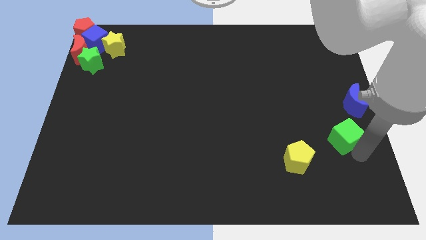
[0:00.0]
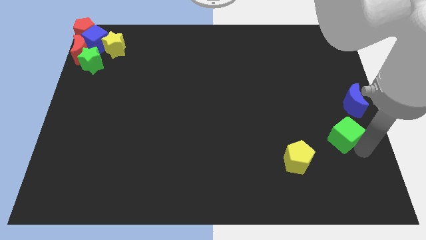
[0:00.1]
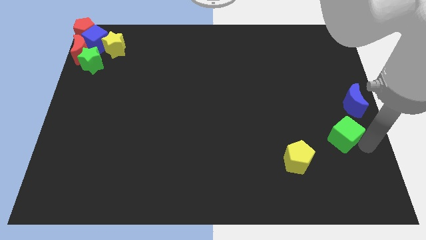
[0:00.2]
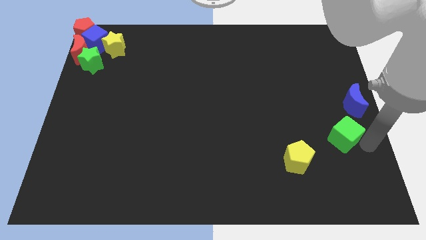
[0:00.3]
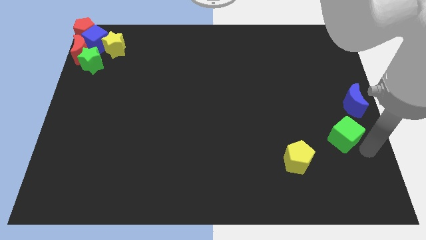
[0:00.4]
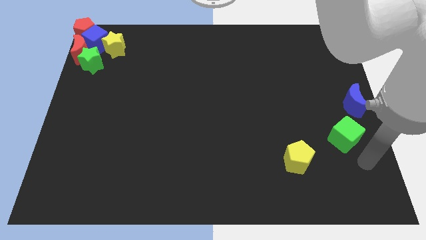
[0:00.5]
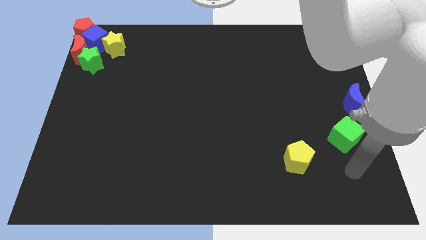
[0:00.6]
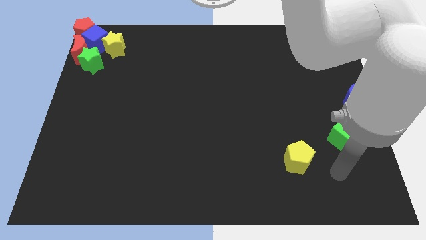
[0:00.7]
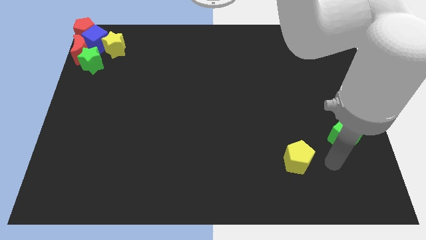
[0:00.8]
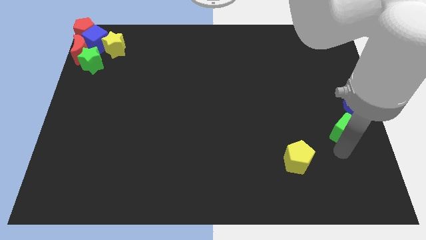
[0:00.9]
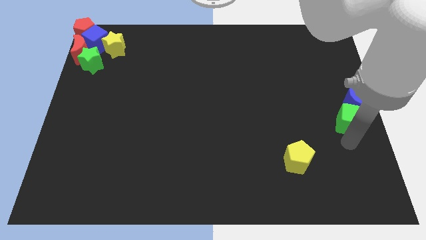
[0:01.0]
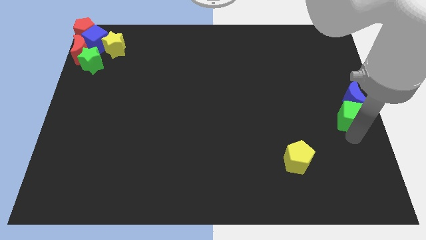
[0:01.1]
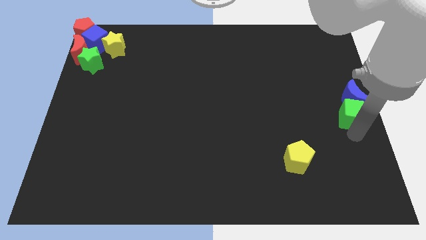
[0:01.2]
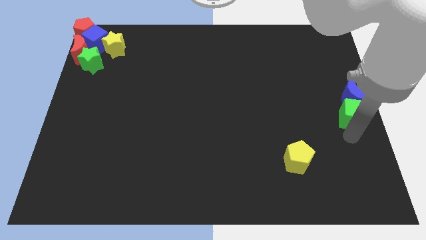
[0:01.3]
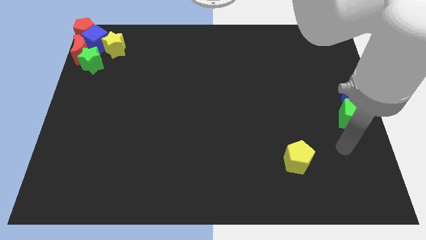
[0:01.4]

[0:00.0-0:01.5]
push the green cube into the blue crescent

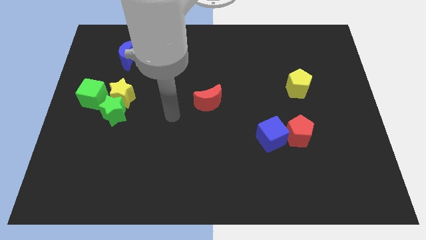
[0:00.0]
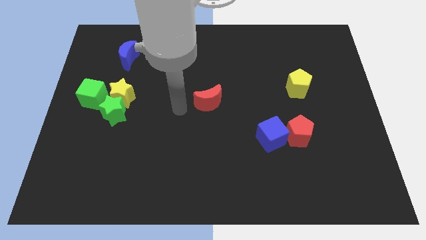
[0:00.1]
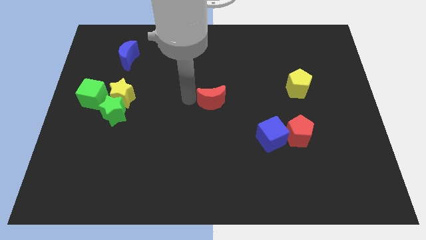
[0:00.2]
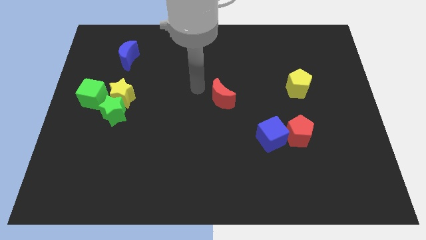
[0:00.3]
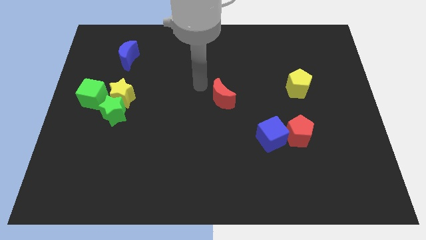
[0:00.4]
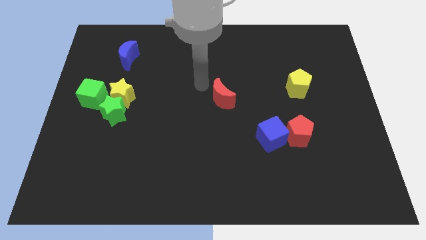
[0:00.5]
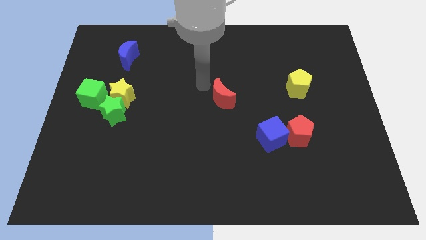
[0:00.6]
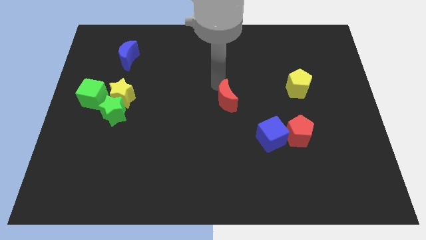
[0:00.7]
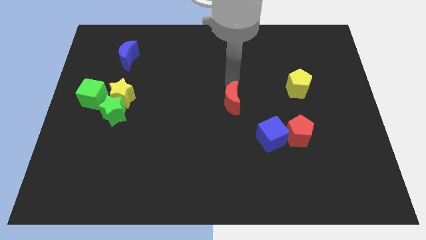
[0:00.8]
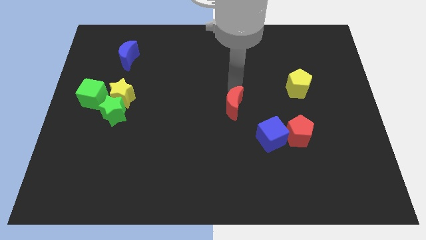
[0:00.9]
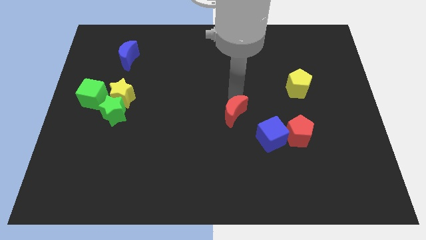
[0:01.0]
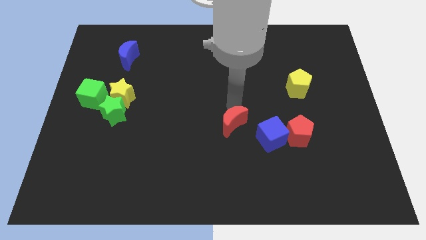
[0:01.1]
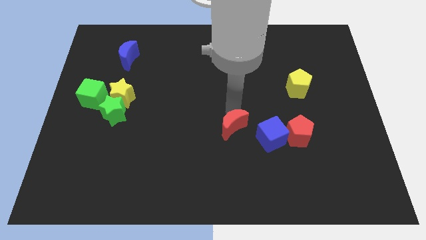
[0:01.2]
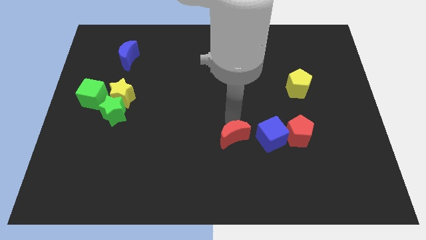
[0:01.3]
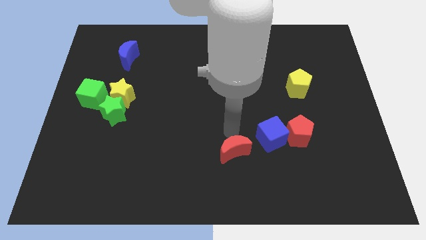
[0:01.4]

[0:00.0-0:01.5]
push the red moon slightly to the bottom of the board

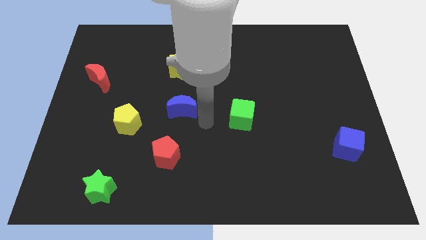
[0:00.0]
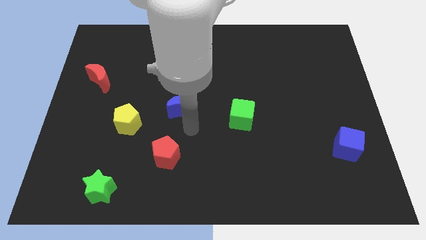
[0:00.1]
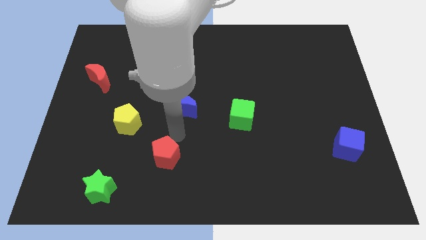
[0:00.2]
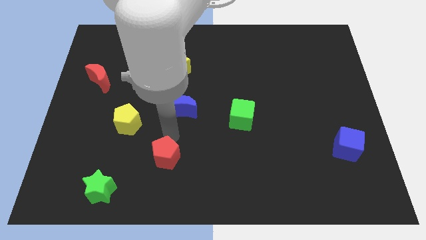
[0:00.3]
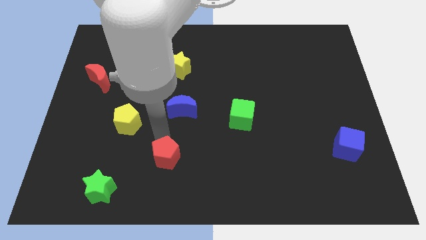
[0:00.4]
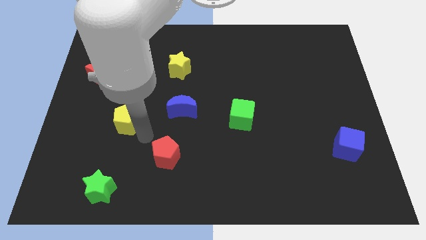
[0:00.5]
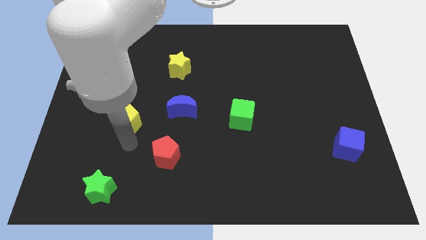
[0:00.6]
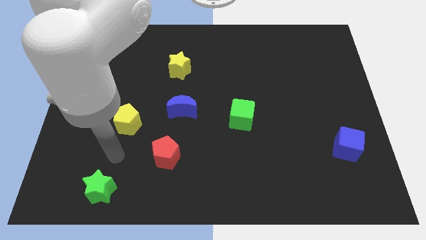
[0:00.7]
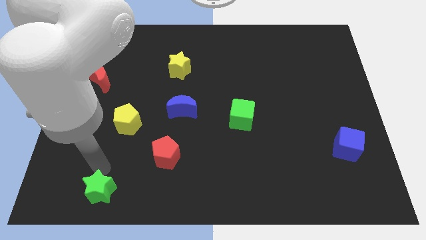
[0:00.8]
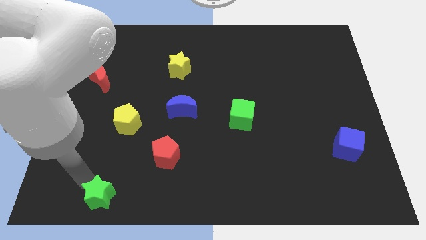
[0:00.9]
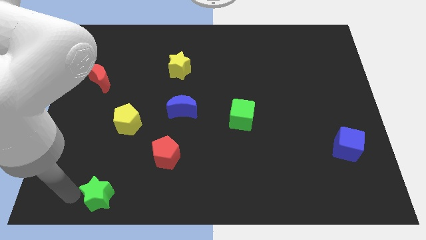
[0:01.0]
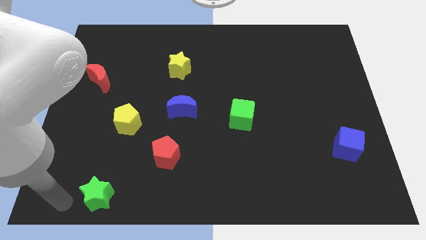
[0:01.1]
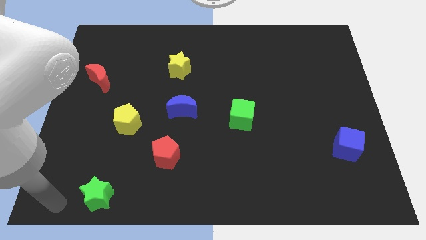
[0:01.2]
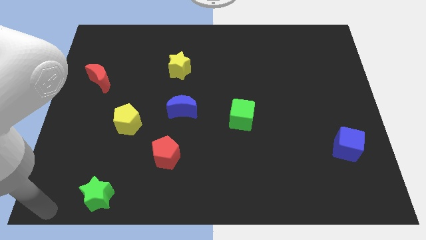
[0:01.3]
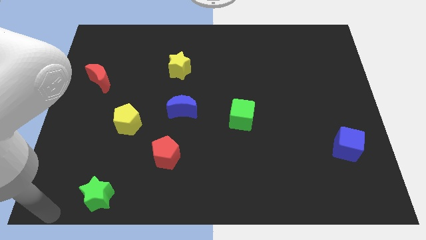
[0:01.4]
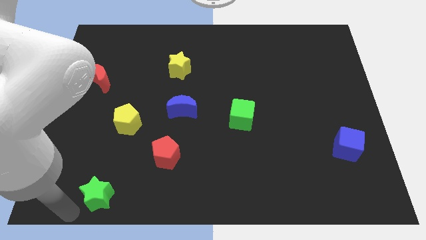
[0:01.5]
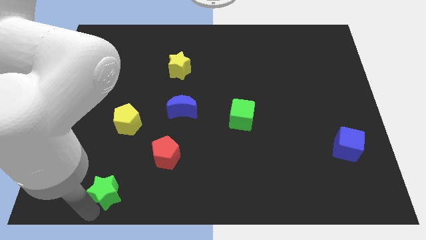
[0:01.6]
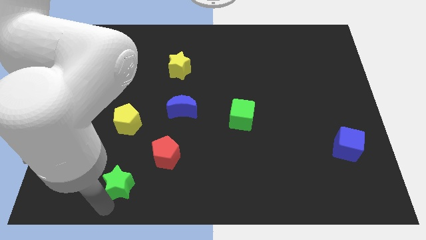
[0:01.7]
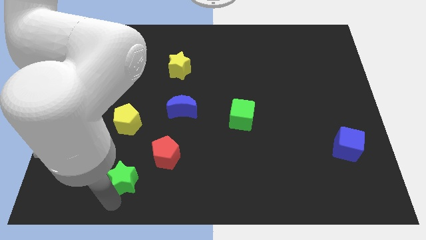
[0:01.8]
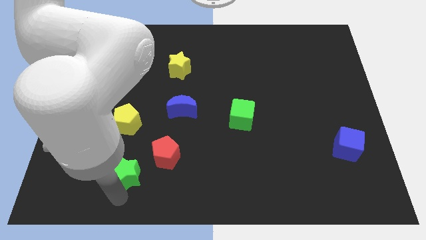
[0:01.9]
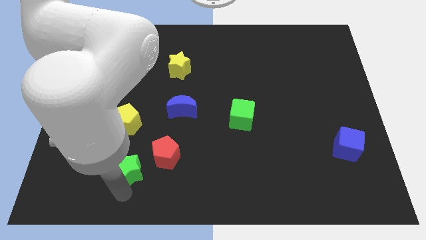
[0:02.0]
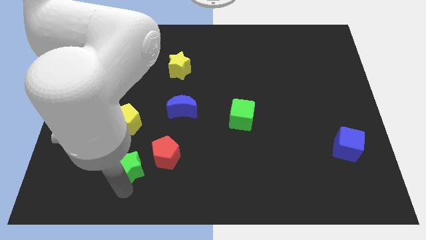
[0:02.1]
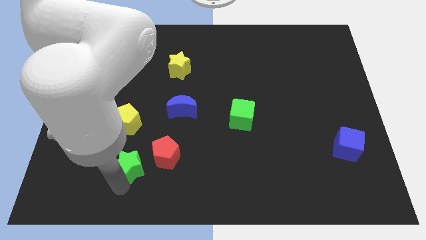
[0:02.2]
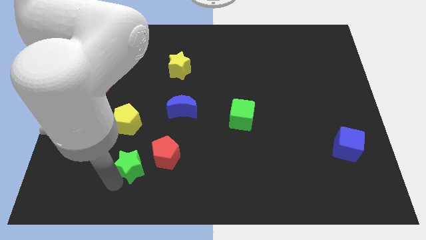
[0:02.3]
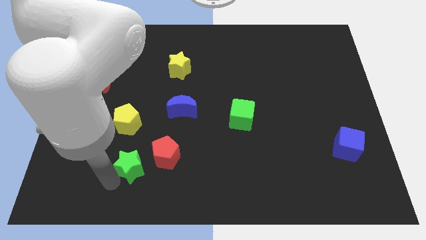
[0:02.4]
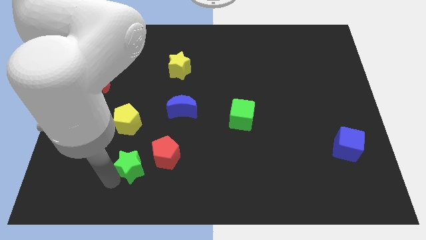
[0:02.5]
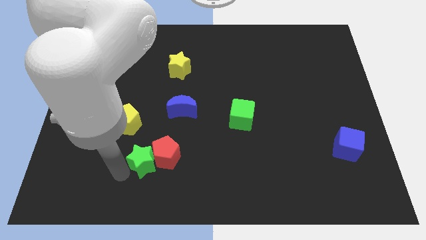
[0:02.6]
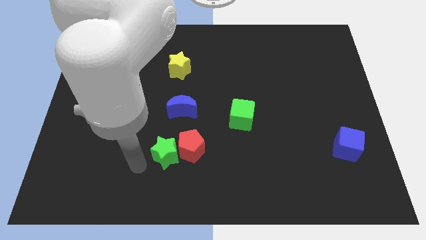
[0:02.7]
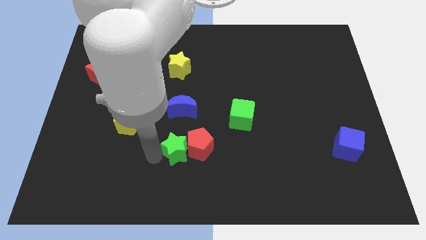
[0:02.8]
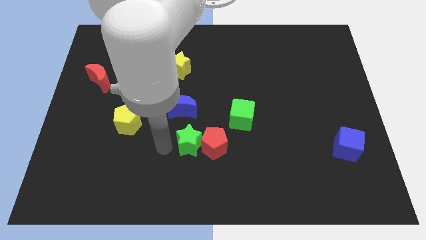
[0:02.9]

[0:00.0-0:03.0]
push green star below blue moon

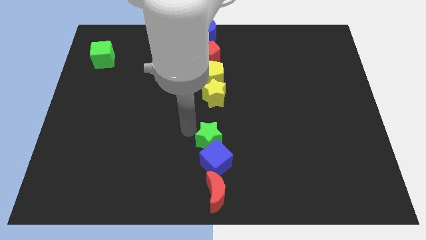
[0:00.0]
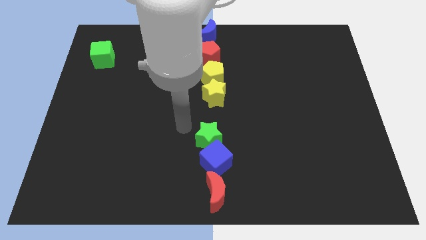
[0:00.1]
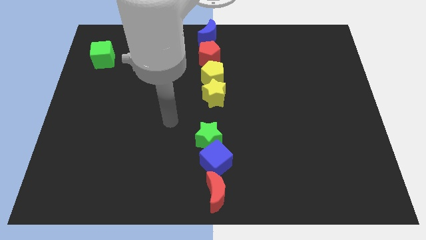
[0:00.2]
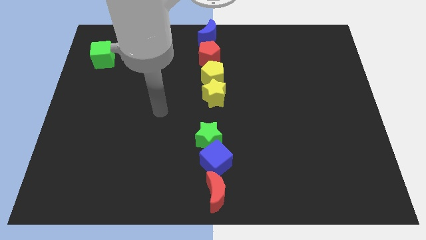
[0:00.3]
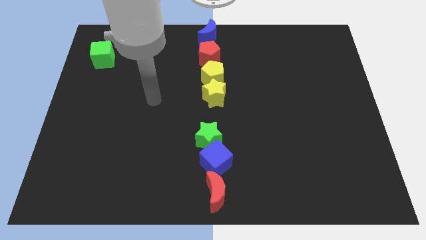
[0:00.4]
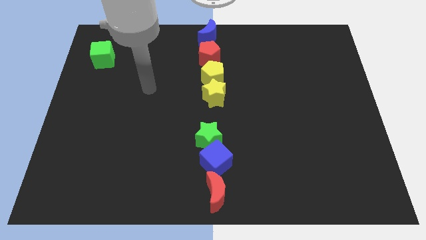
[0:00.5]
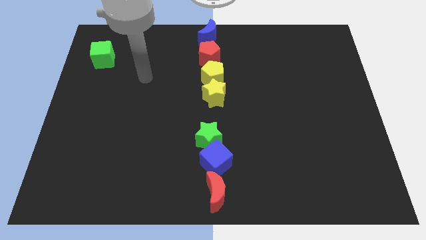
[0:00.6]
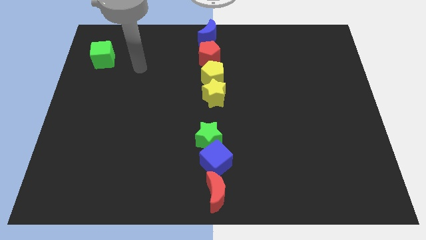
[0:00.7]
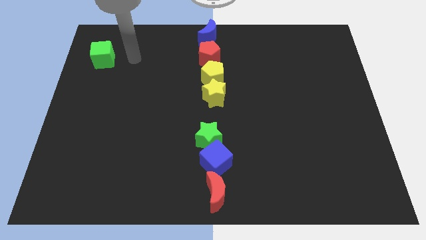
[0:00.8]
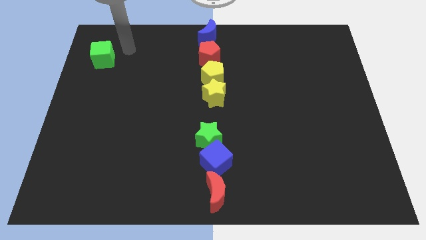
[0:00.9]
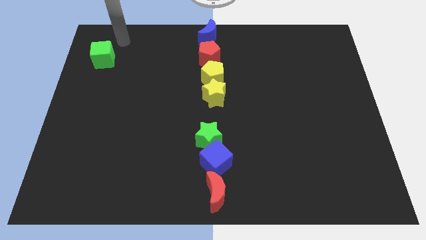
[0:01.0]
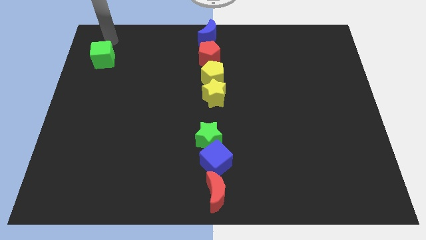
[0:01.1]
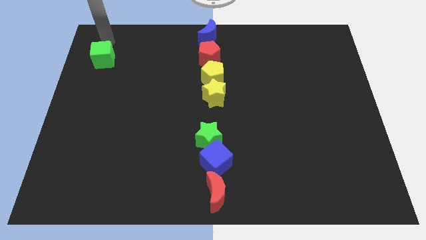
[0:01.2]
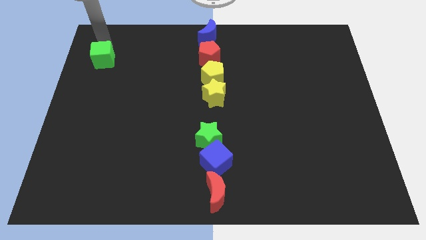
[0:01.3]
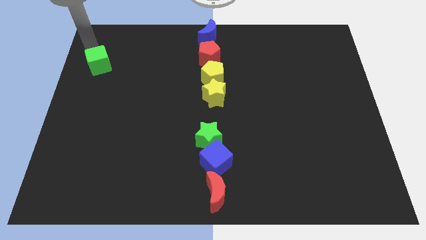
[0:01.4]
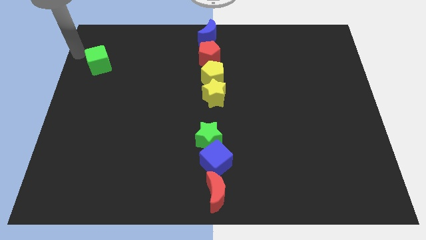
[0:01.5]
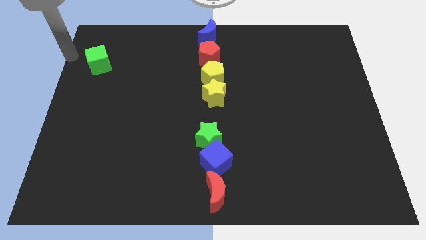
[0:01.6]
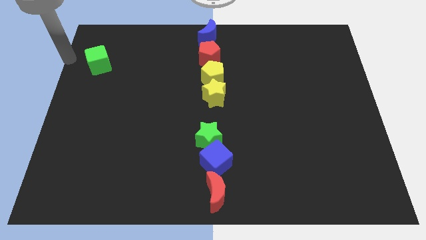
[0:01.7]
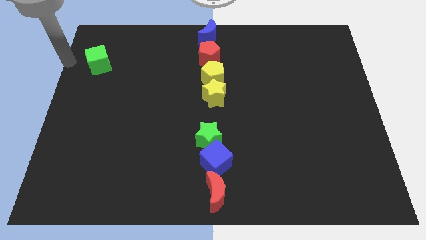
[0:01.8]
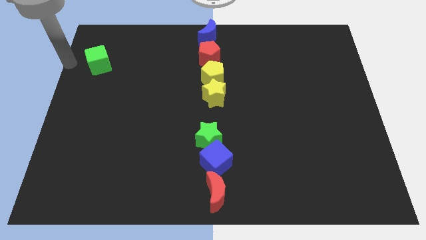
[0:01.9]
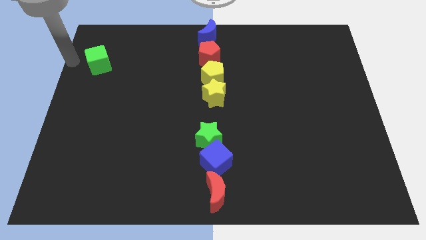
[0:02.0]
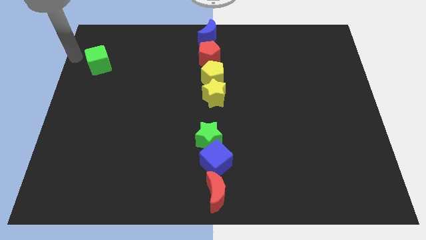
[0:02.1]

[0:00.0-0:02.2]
move the arm left to the green cube

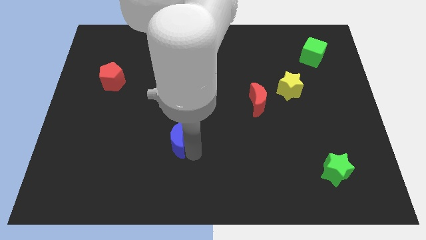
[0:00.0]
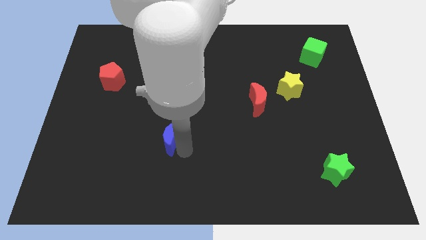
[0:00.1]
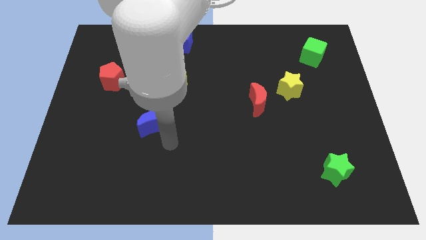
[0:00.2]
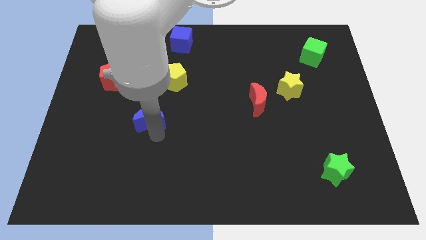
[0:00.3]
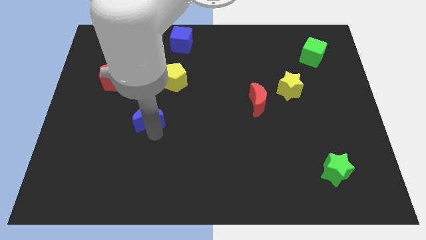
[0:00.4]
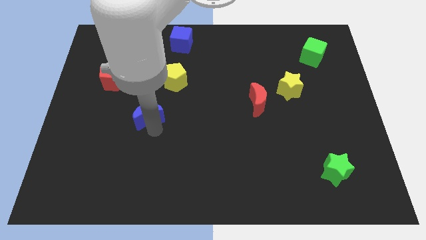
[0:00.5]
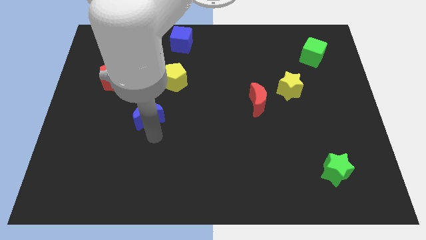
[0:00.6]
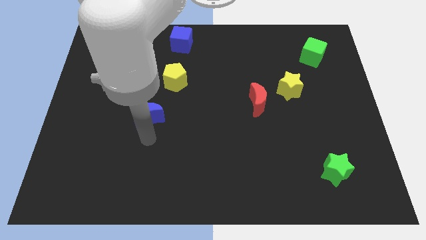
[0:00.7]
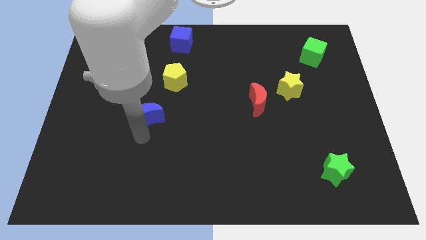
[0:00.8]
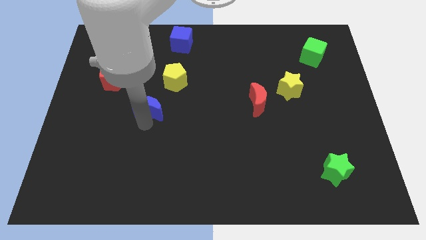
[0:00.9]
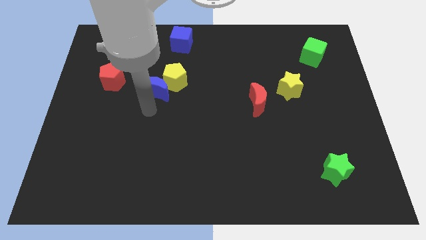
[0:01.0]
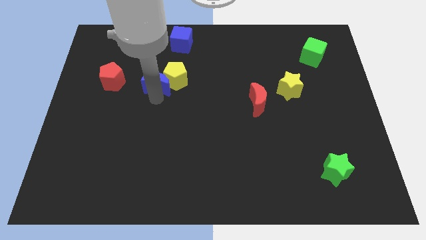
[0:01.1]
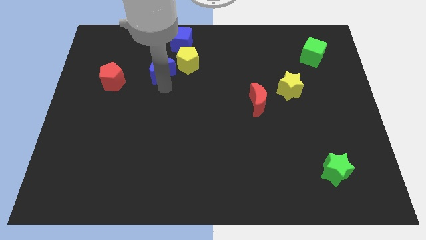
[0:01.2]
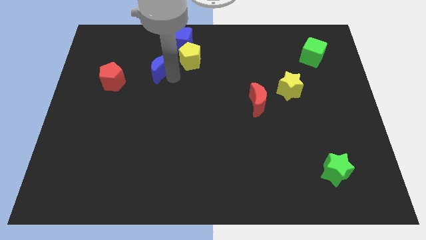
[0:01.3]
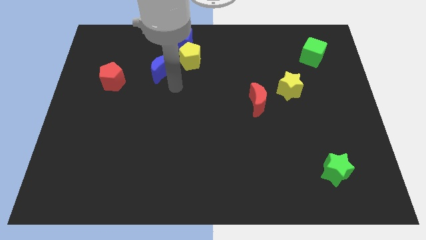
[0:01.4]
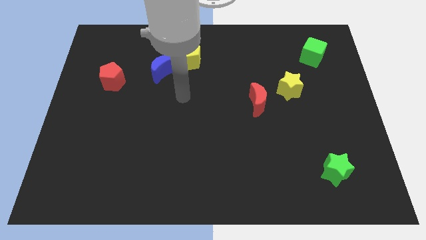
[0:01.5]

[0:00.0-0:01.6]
place blue crescent and yellow pentagon near the blue cube
